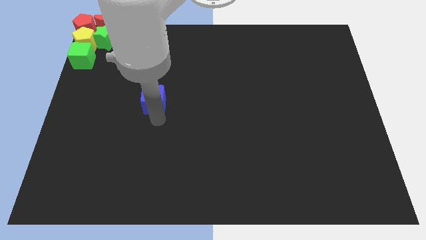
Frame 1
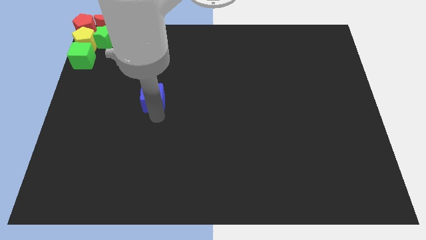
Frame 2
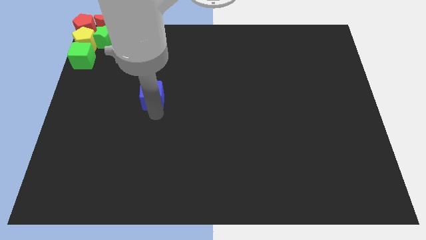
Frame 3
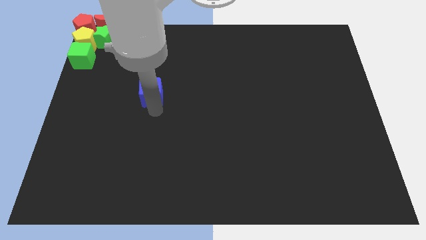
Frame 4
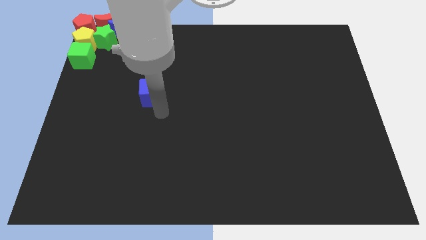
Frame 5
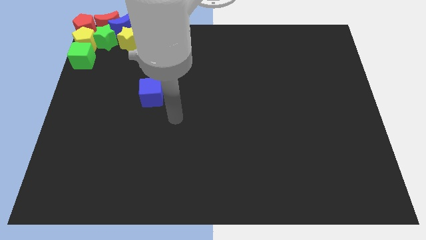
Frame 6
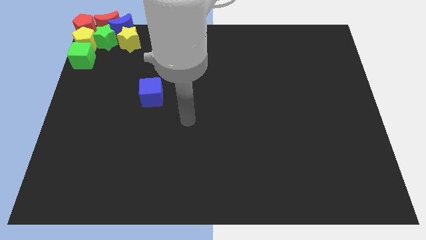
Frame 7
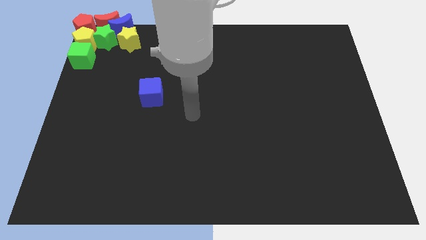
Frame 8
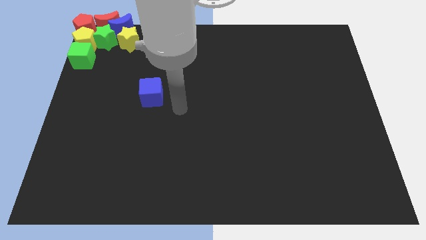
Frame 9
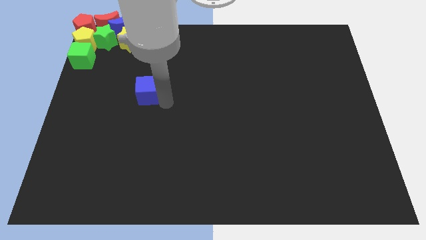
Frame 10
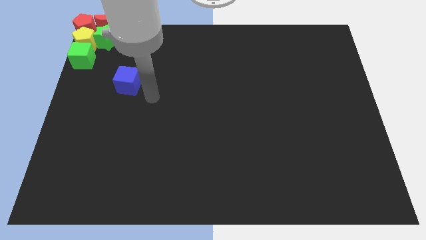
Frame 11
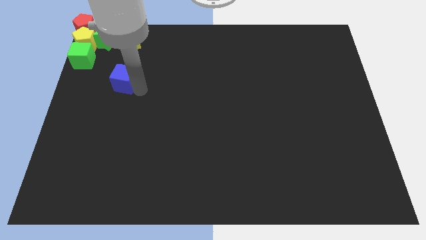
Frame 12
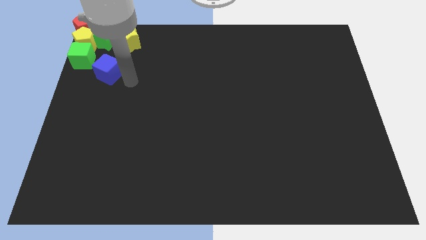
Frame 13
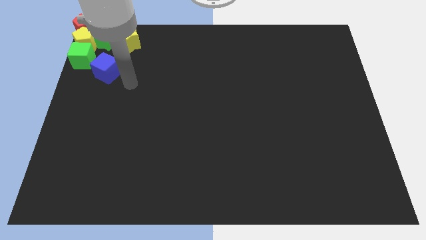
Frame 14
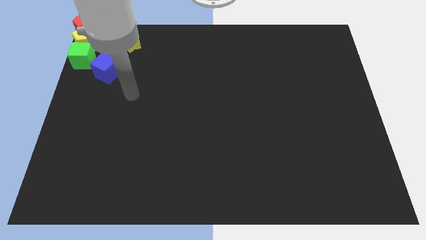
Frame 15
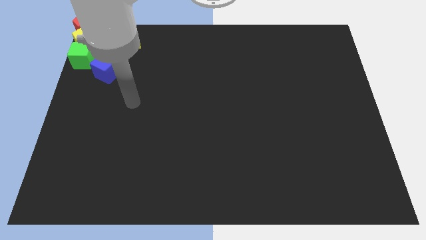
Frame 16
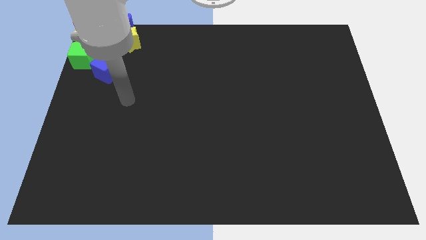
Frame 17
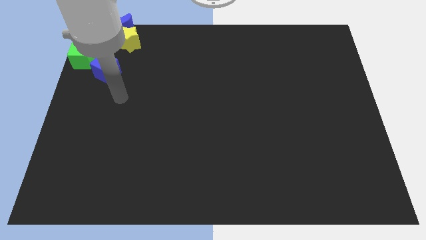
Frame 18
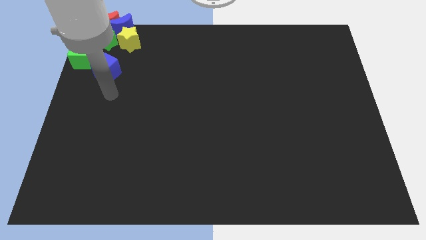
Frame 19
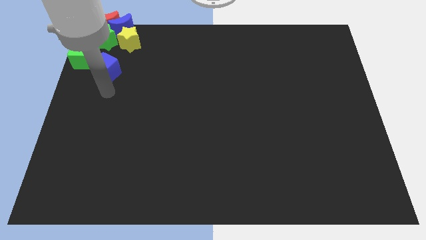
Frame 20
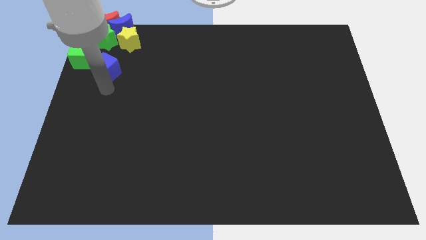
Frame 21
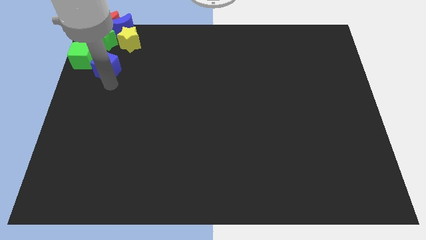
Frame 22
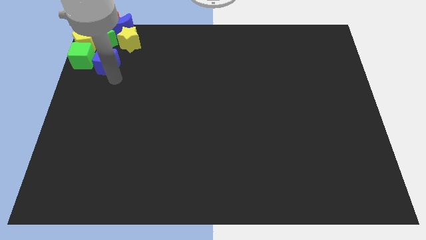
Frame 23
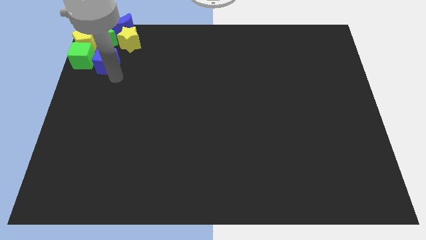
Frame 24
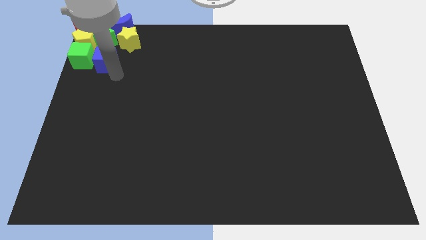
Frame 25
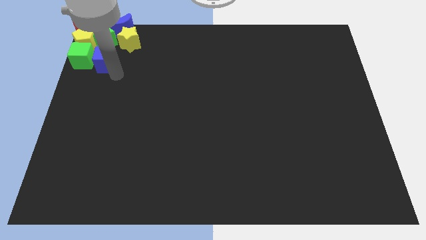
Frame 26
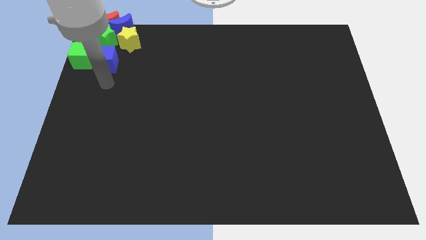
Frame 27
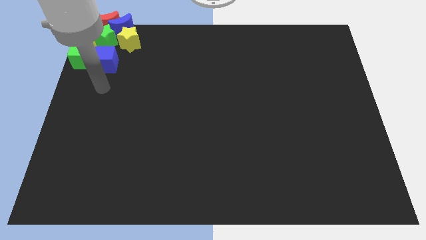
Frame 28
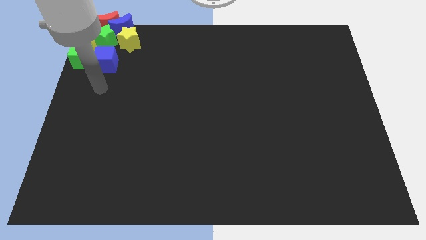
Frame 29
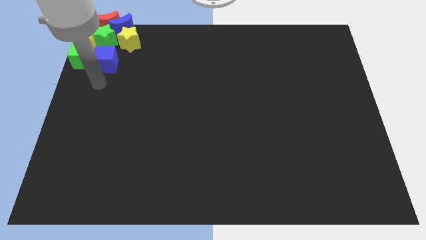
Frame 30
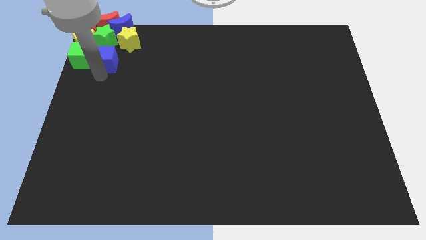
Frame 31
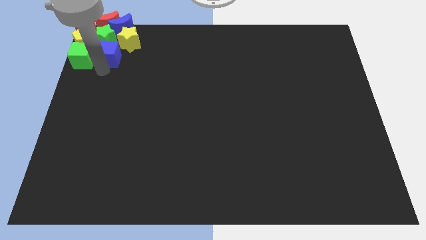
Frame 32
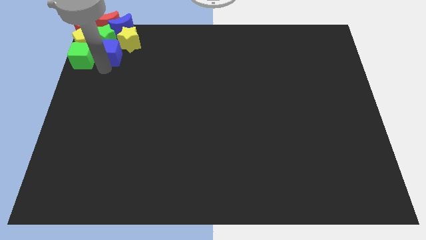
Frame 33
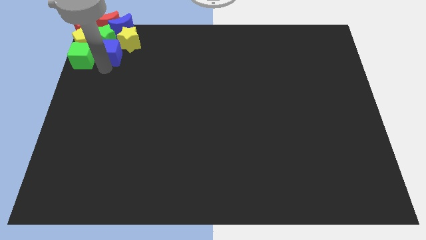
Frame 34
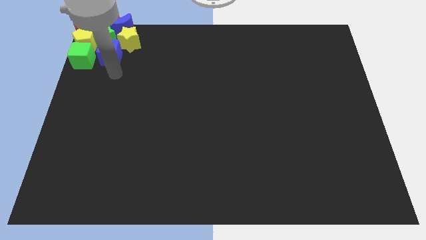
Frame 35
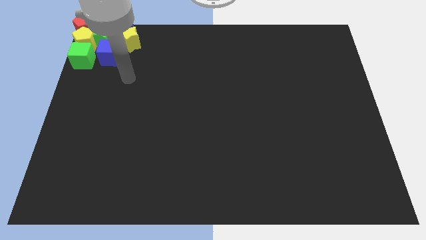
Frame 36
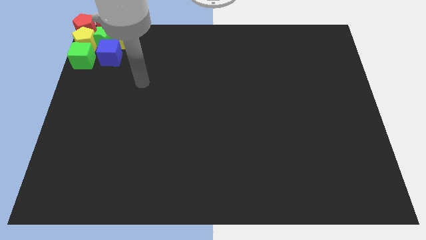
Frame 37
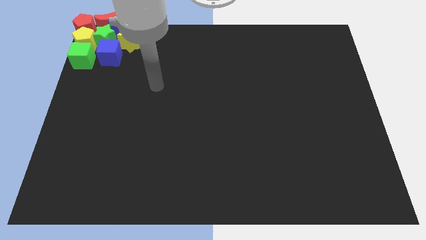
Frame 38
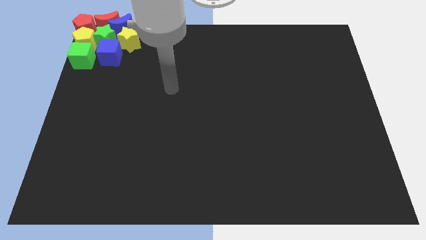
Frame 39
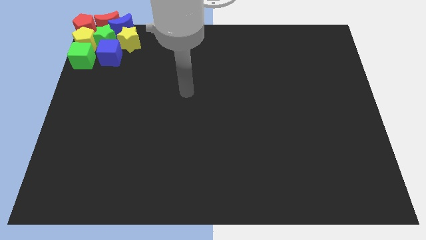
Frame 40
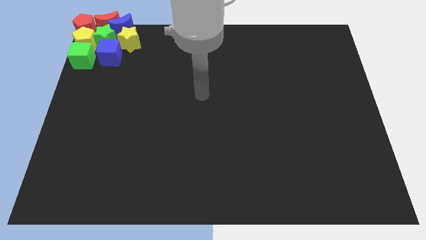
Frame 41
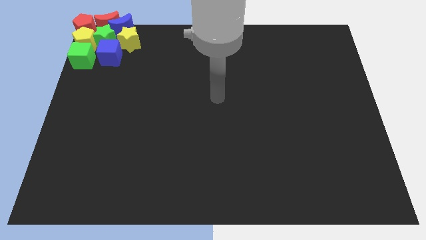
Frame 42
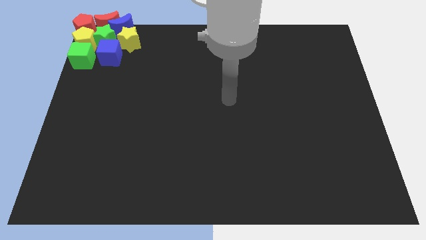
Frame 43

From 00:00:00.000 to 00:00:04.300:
push the blue cube into the group of blocks

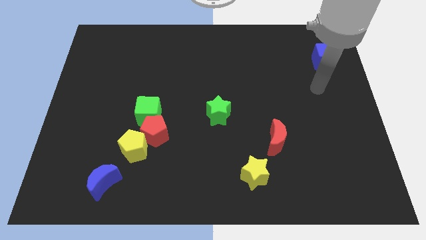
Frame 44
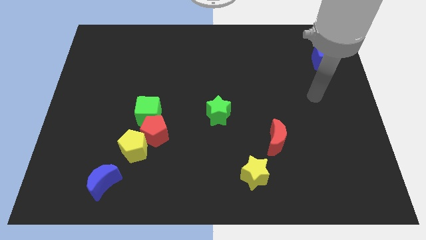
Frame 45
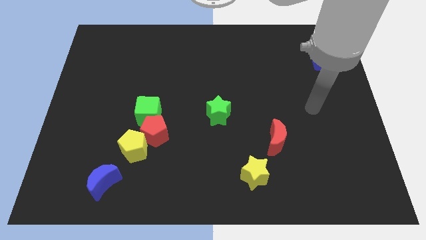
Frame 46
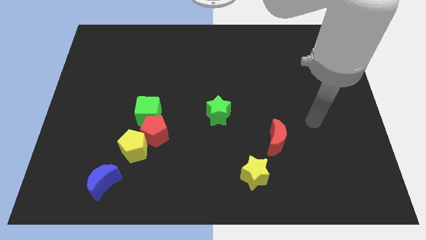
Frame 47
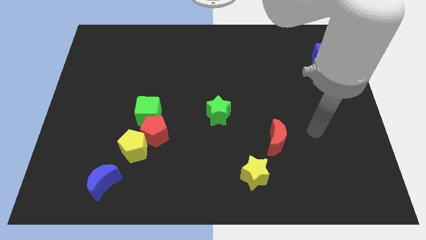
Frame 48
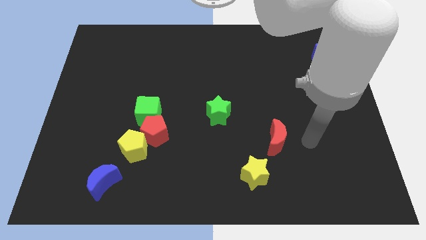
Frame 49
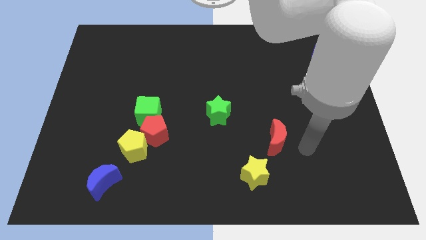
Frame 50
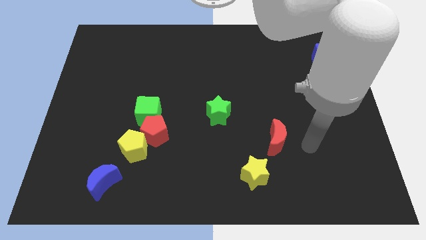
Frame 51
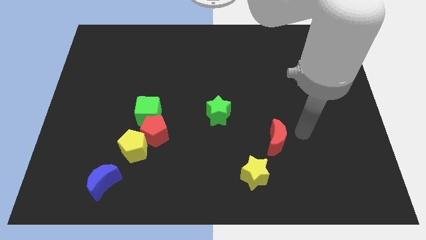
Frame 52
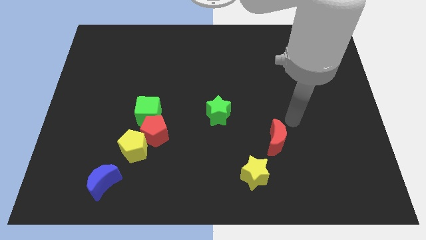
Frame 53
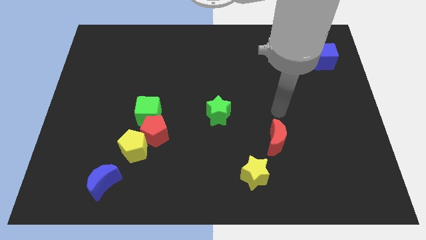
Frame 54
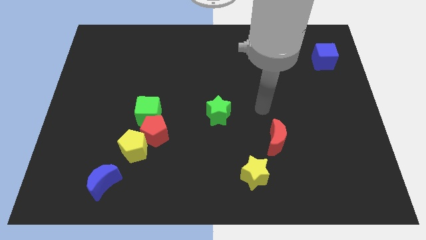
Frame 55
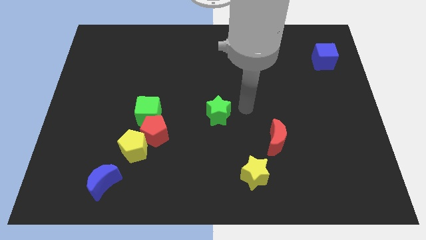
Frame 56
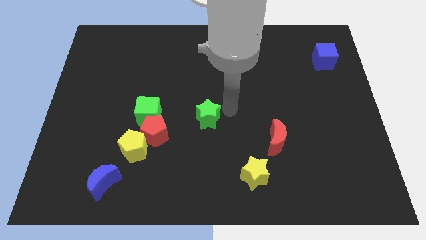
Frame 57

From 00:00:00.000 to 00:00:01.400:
tap the right side of the green star

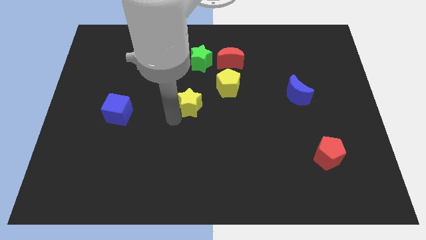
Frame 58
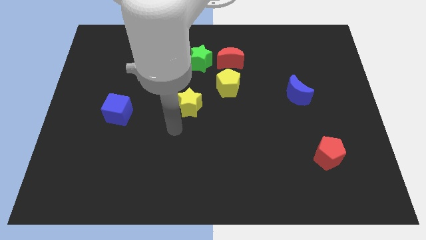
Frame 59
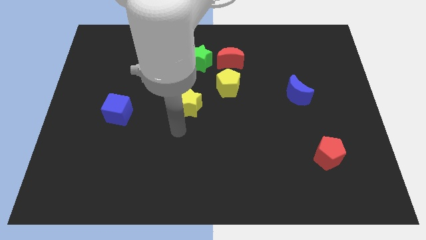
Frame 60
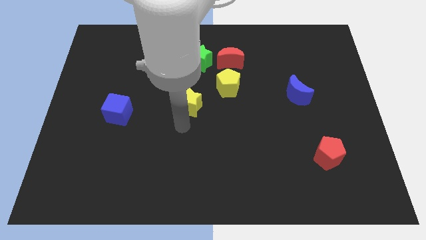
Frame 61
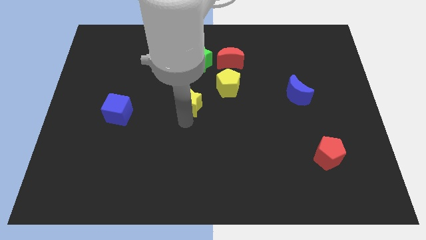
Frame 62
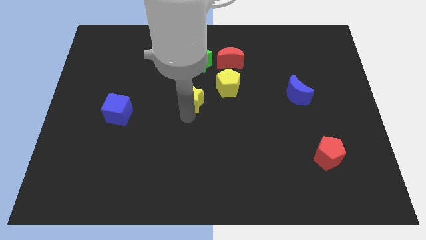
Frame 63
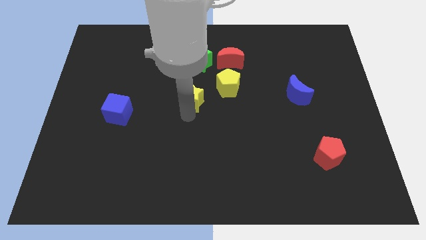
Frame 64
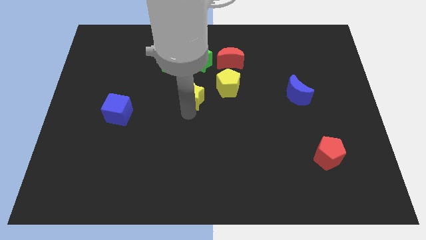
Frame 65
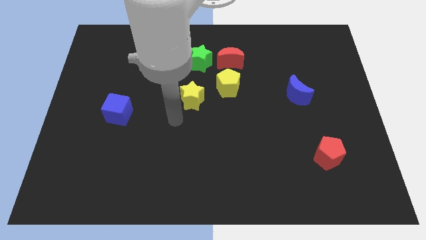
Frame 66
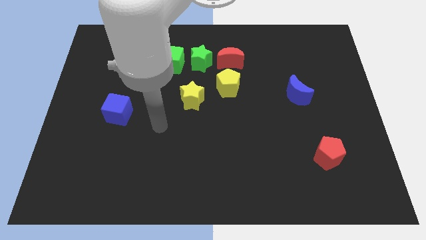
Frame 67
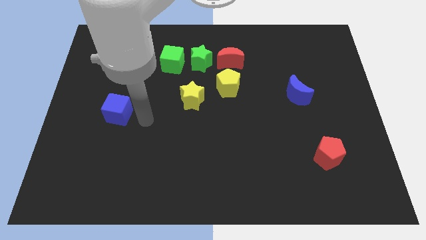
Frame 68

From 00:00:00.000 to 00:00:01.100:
push the yellow star to the bottom of the green star

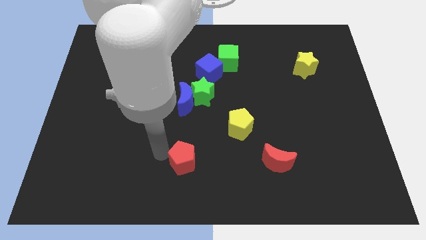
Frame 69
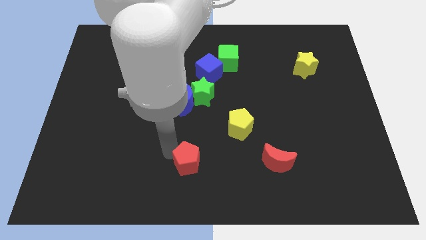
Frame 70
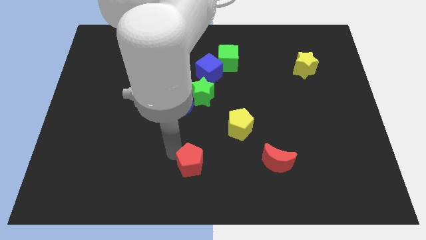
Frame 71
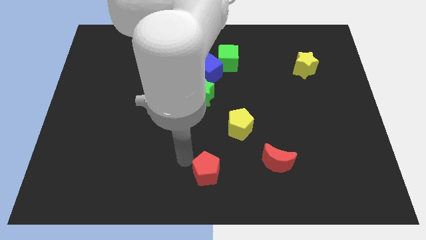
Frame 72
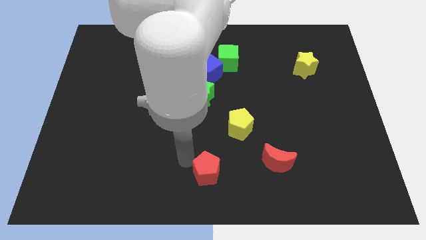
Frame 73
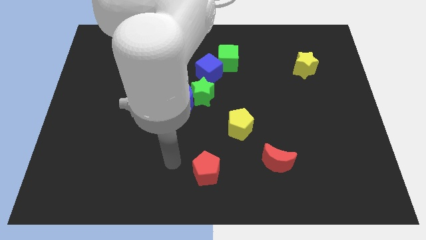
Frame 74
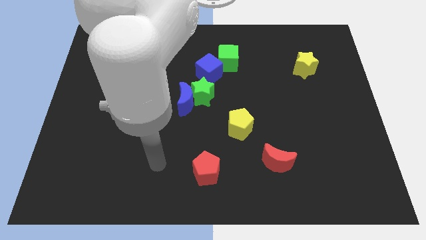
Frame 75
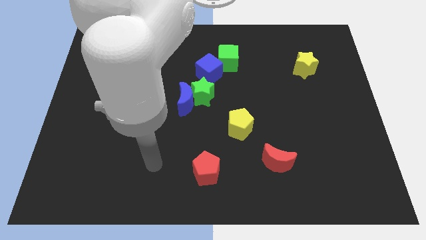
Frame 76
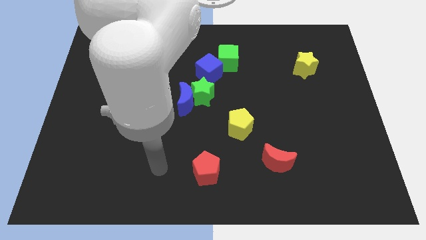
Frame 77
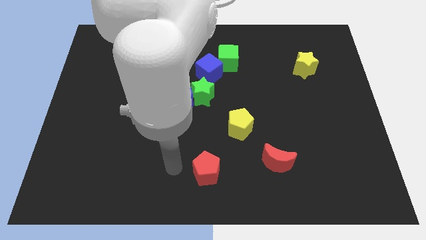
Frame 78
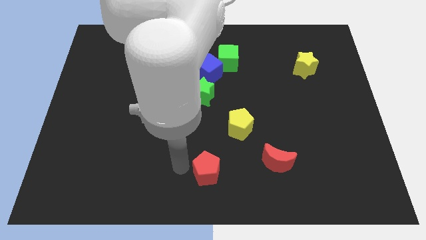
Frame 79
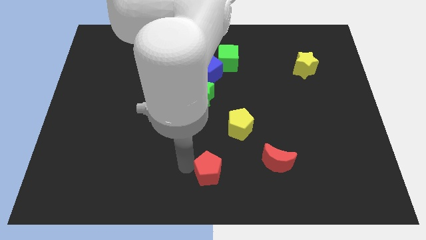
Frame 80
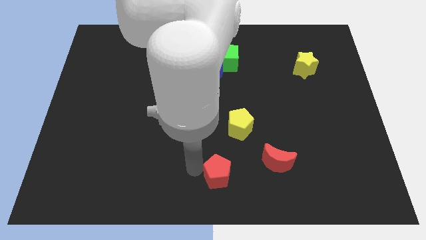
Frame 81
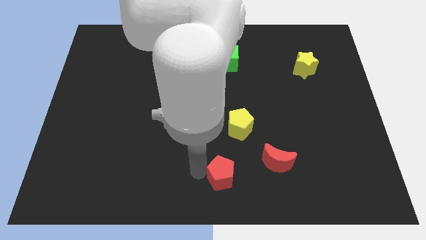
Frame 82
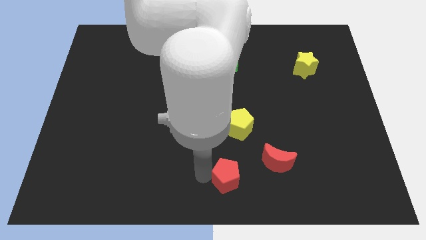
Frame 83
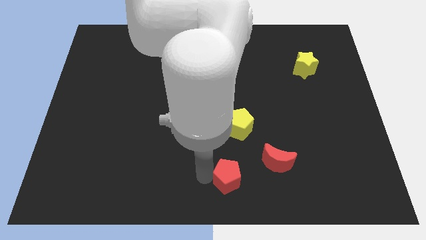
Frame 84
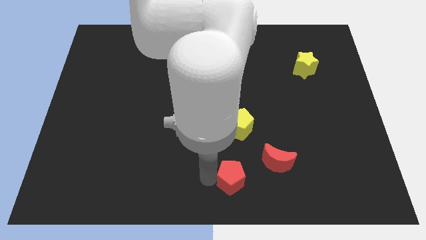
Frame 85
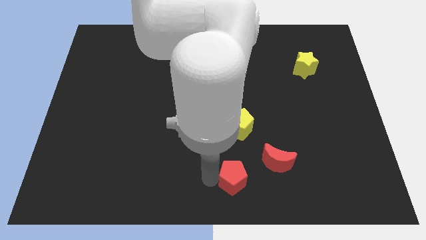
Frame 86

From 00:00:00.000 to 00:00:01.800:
slide the red pentagon towards the bottom center

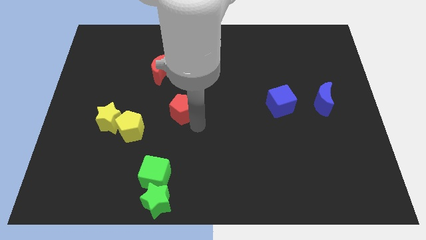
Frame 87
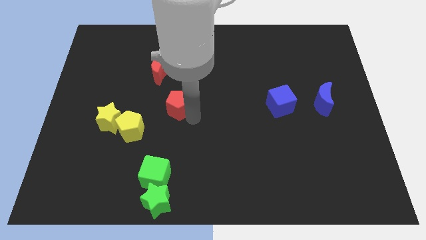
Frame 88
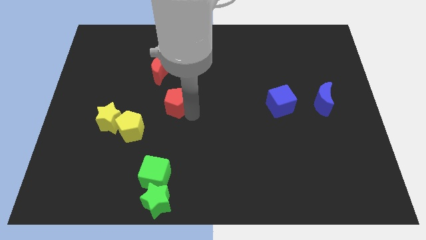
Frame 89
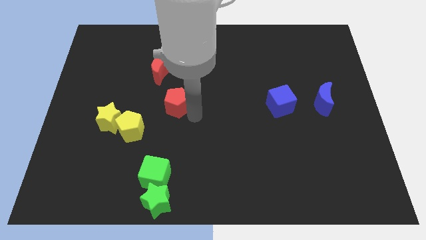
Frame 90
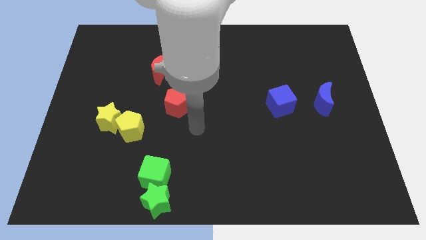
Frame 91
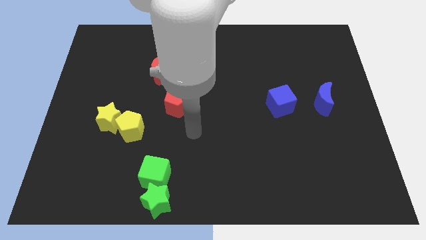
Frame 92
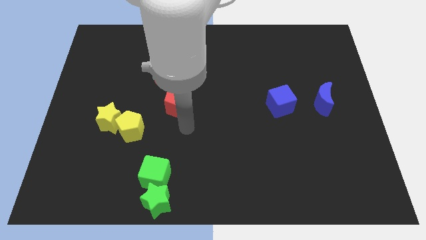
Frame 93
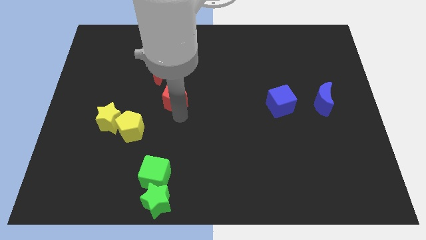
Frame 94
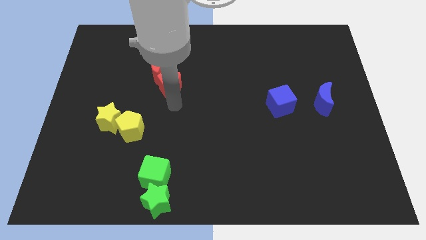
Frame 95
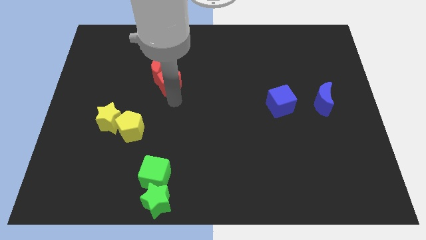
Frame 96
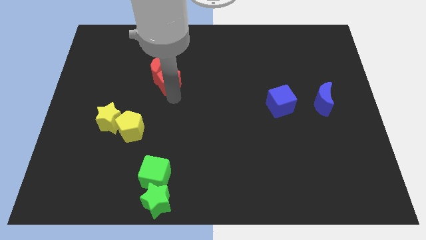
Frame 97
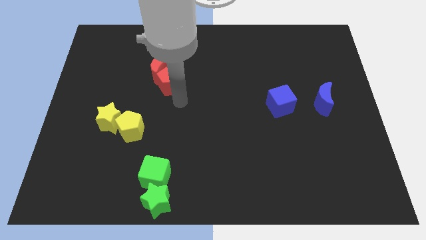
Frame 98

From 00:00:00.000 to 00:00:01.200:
move the red pentagon into the red crescent
